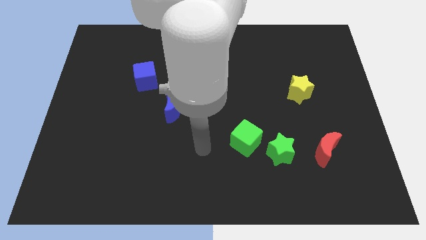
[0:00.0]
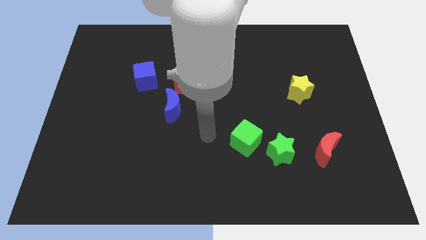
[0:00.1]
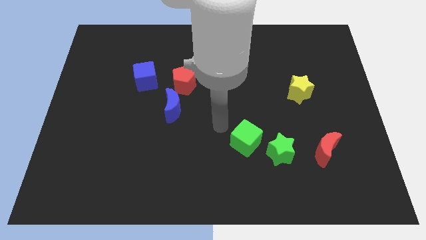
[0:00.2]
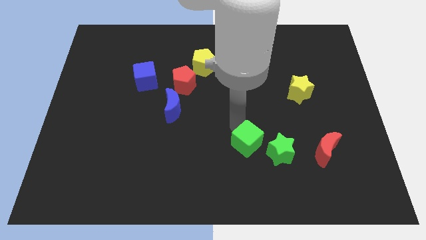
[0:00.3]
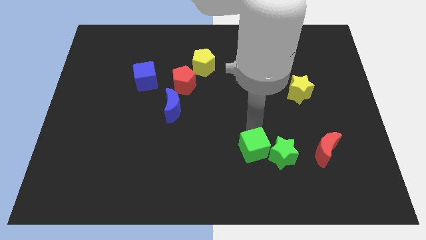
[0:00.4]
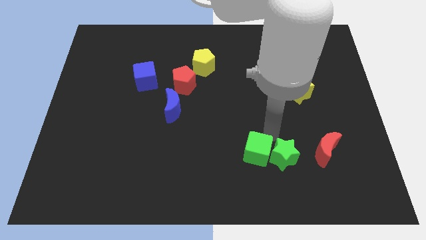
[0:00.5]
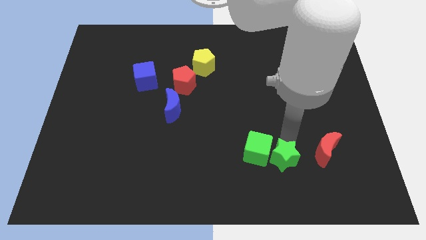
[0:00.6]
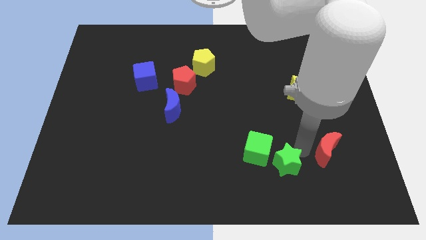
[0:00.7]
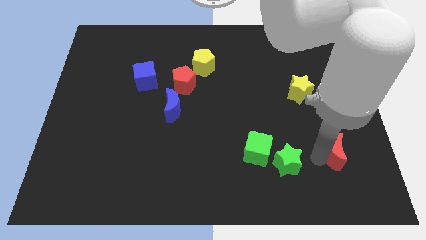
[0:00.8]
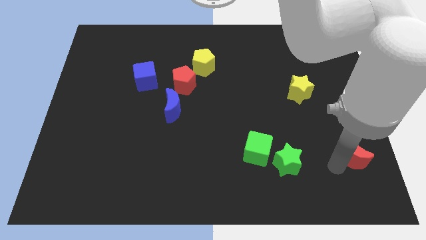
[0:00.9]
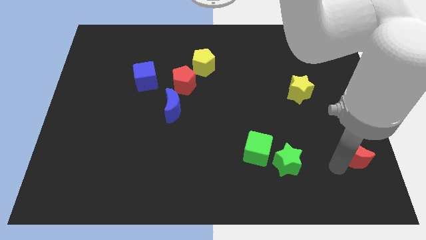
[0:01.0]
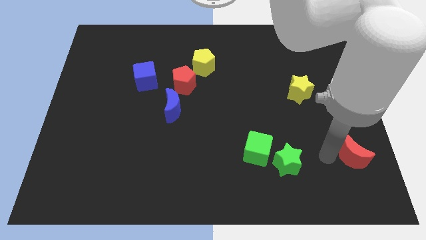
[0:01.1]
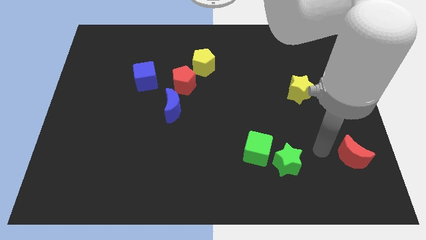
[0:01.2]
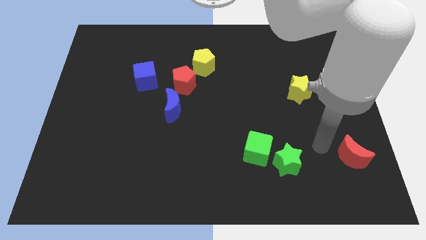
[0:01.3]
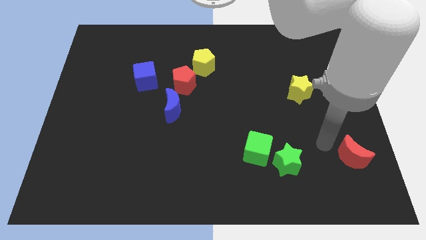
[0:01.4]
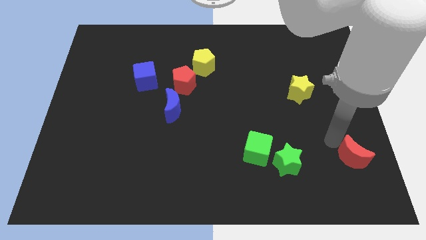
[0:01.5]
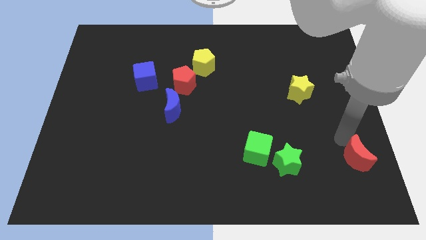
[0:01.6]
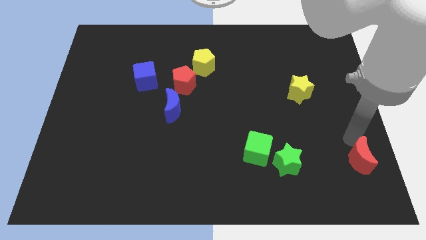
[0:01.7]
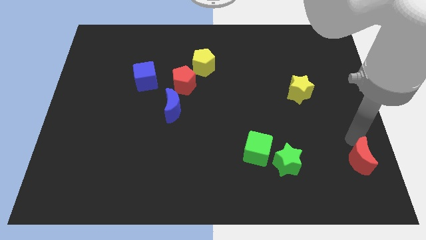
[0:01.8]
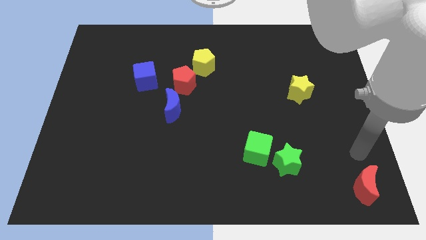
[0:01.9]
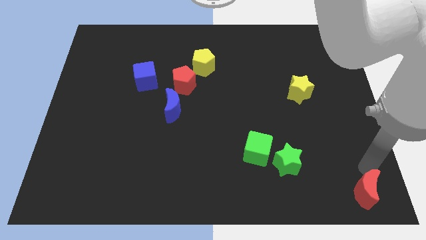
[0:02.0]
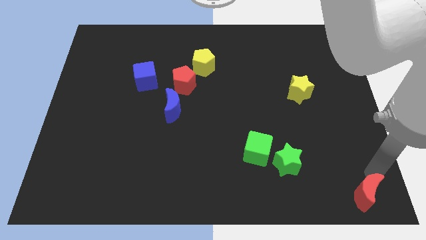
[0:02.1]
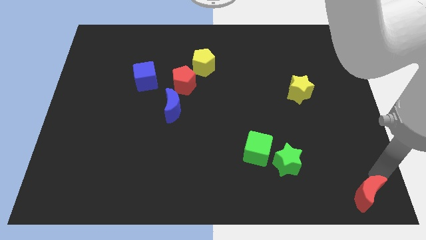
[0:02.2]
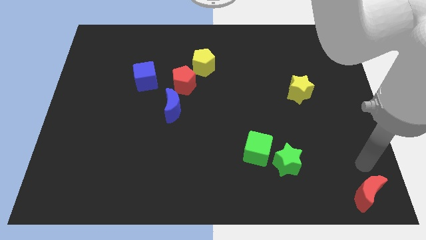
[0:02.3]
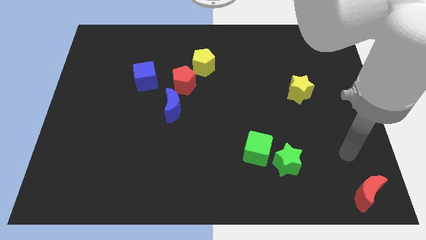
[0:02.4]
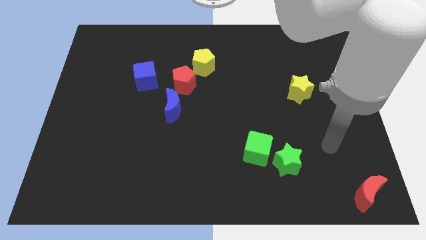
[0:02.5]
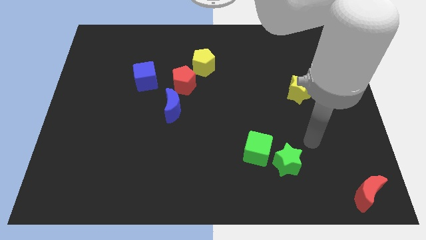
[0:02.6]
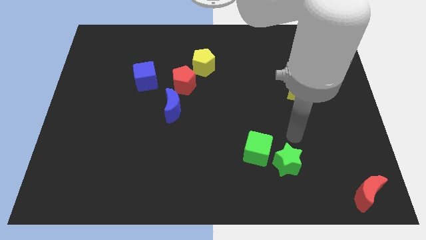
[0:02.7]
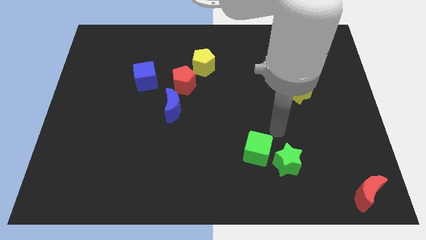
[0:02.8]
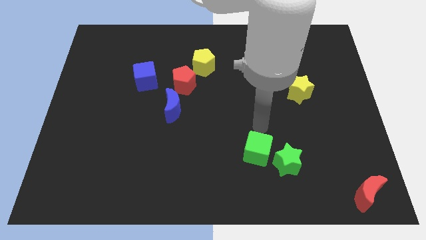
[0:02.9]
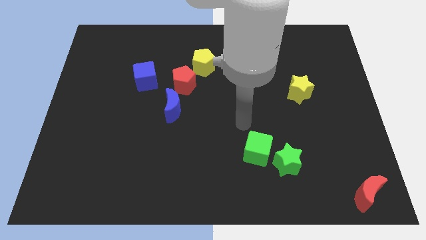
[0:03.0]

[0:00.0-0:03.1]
push the red crescent to the bottom right corner of the board

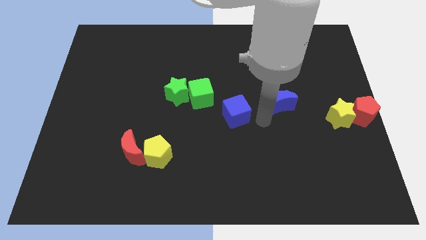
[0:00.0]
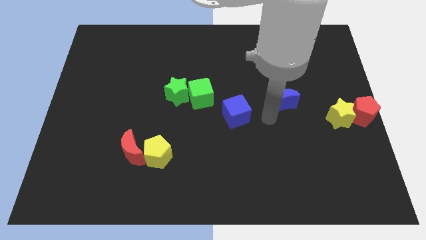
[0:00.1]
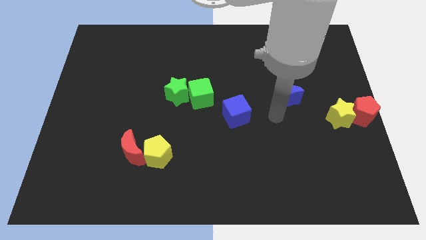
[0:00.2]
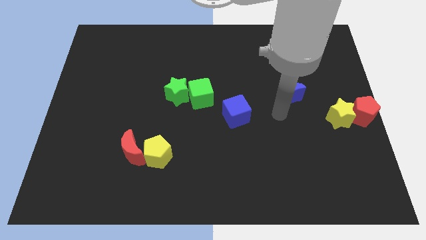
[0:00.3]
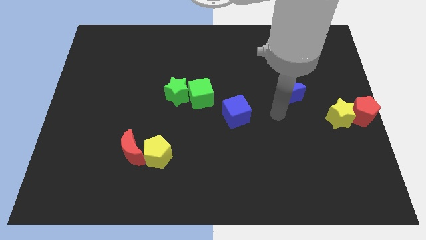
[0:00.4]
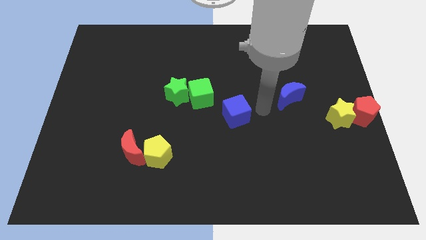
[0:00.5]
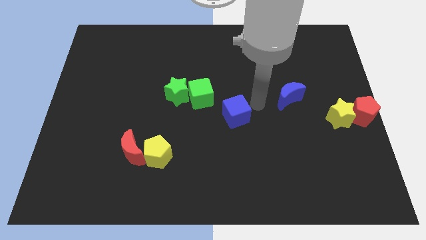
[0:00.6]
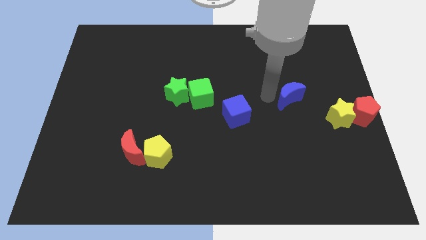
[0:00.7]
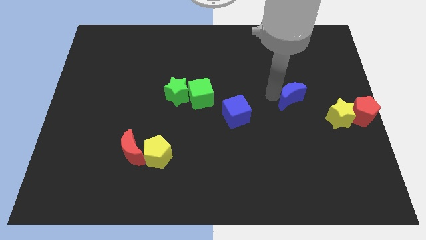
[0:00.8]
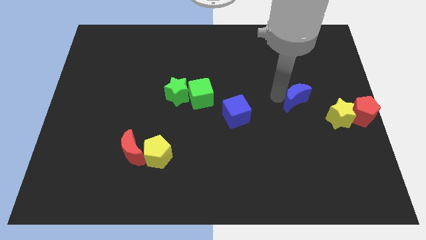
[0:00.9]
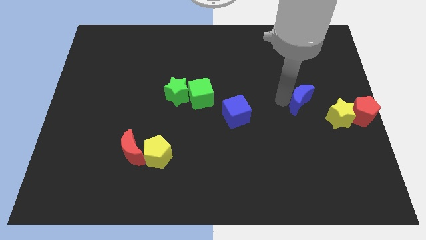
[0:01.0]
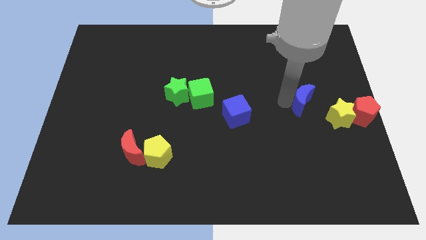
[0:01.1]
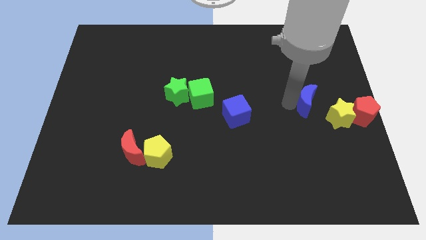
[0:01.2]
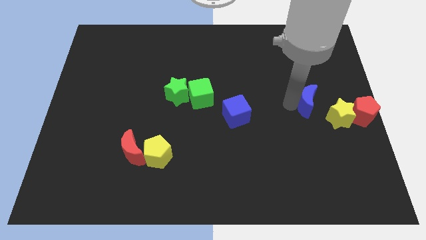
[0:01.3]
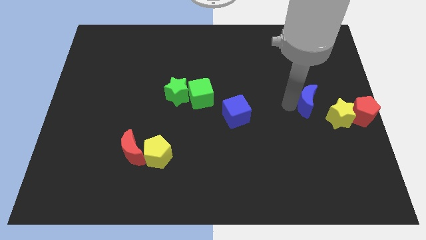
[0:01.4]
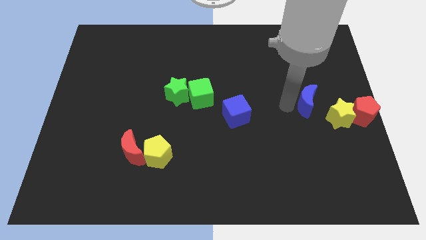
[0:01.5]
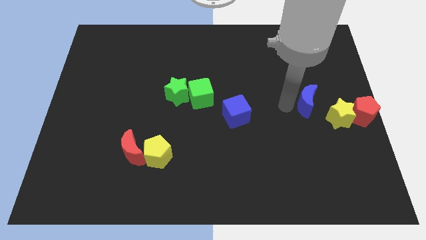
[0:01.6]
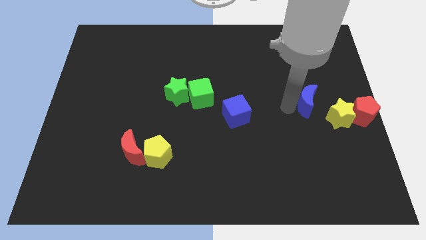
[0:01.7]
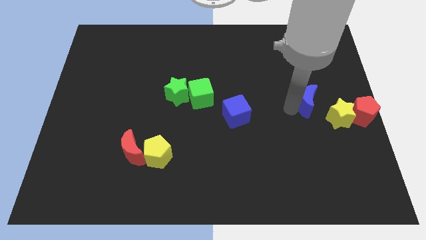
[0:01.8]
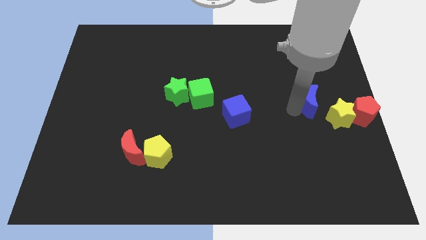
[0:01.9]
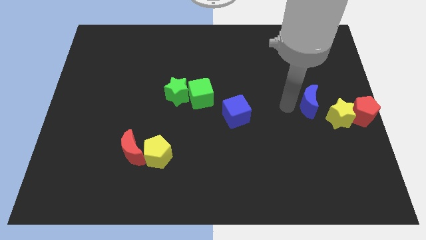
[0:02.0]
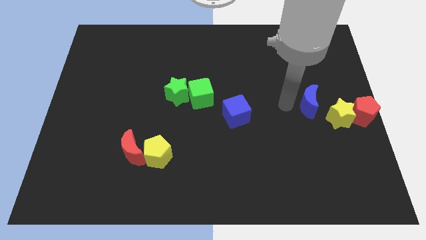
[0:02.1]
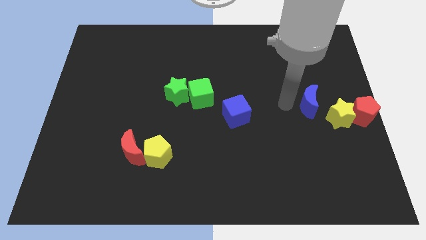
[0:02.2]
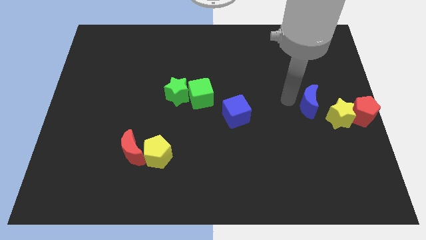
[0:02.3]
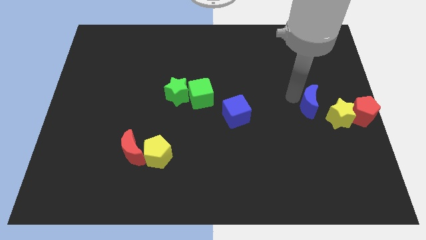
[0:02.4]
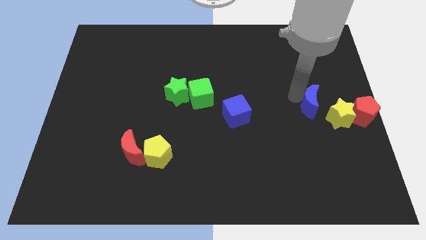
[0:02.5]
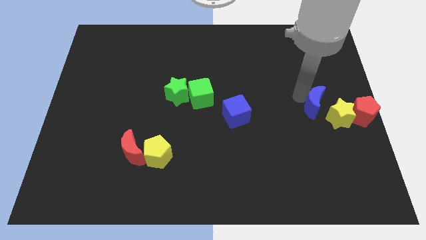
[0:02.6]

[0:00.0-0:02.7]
place blue moon to the top left of the of the yellow star

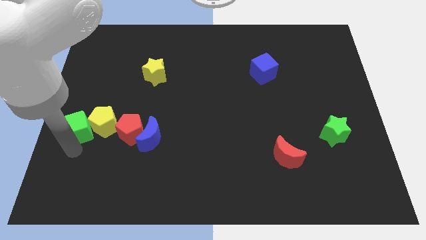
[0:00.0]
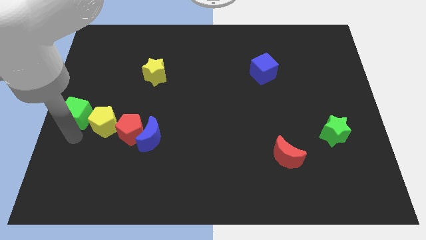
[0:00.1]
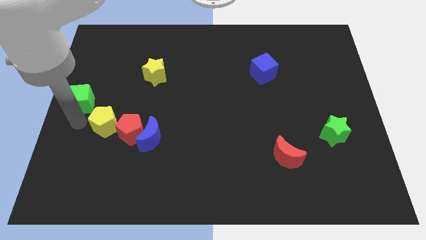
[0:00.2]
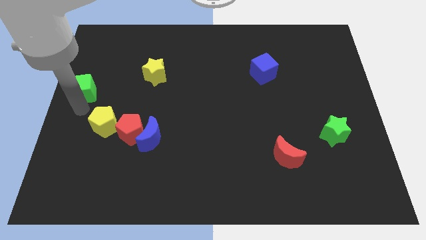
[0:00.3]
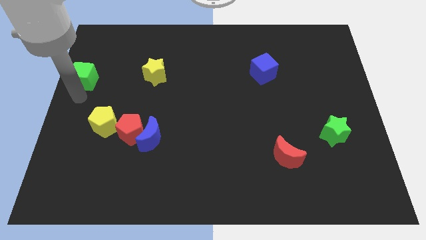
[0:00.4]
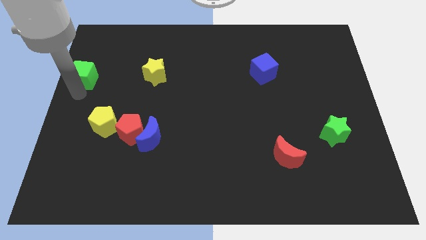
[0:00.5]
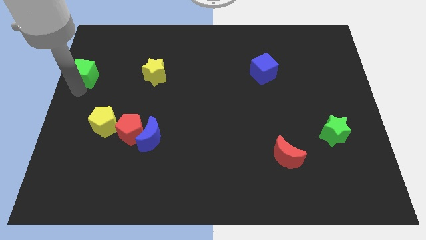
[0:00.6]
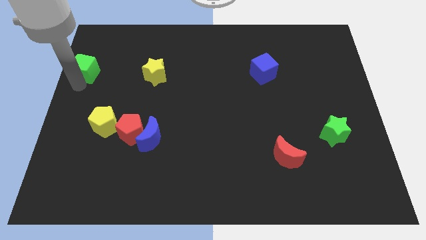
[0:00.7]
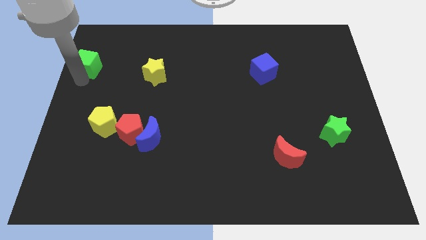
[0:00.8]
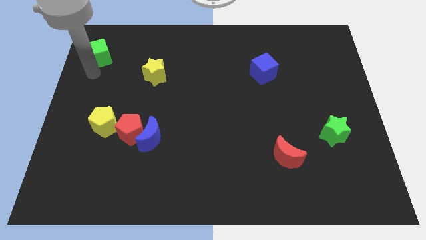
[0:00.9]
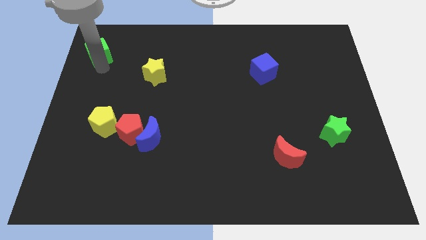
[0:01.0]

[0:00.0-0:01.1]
take the green cube away from the yellow pentagon

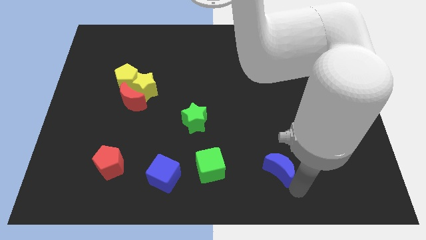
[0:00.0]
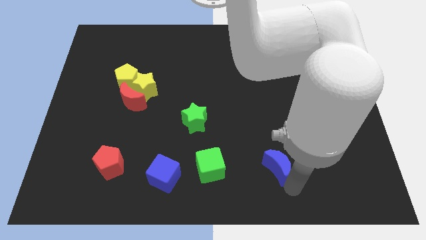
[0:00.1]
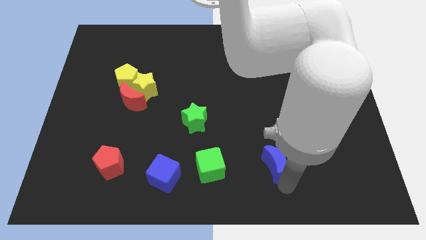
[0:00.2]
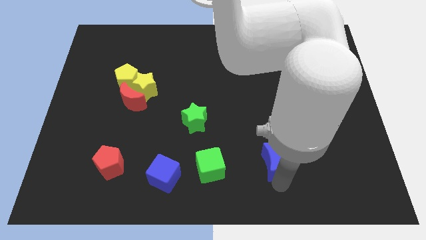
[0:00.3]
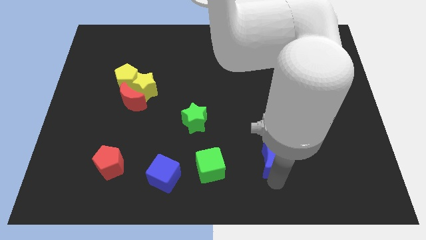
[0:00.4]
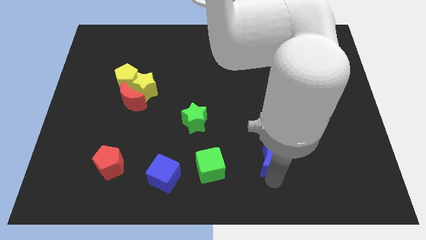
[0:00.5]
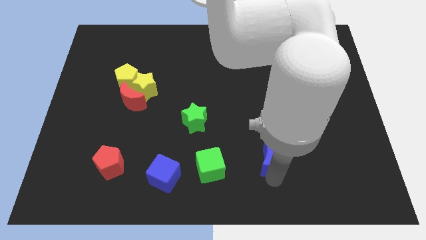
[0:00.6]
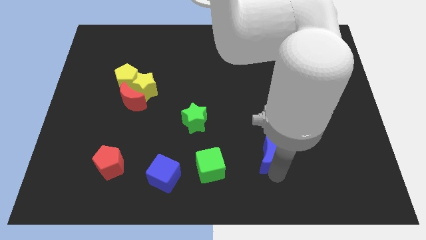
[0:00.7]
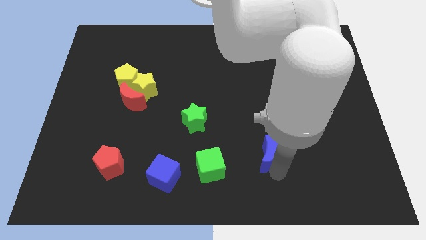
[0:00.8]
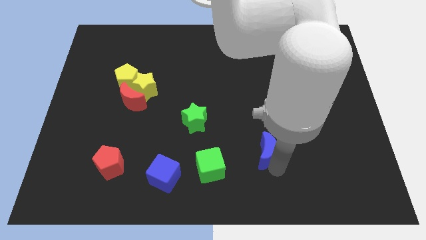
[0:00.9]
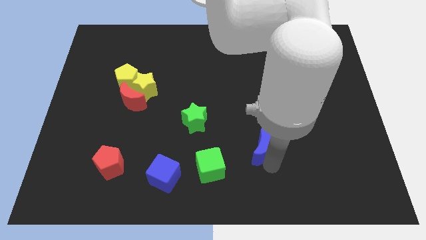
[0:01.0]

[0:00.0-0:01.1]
move blue moon diagonal to green cube

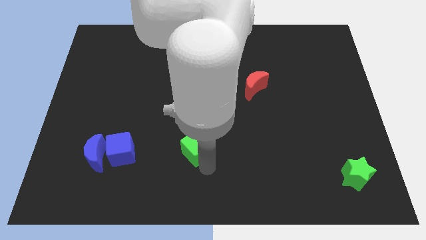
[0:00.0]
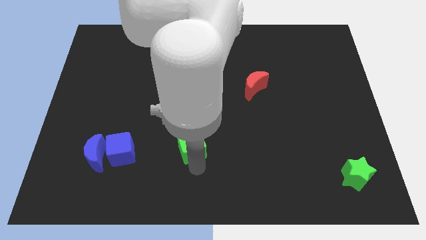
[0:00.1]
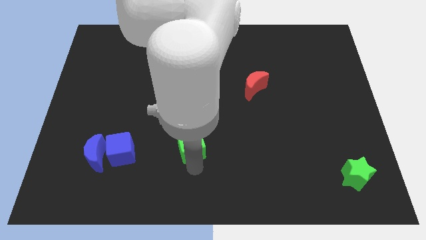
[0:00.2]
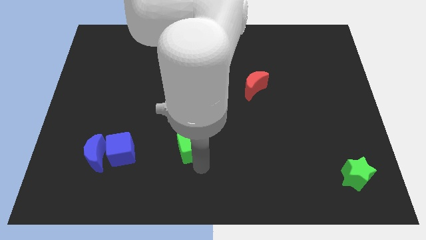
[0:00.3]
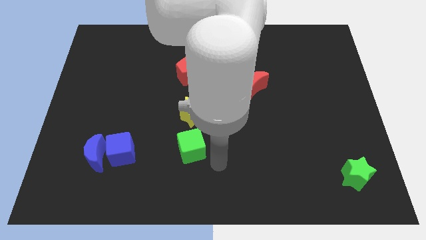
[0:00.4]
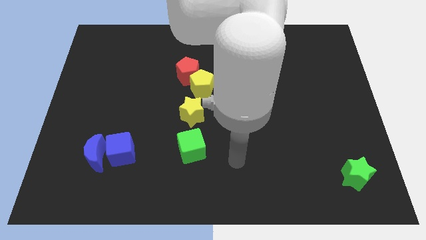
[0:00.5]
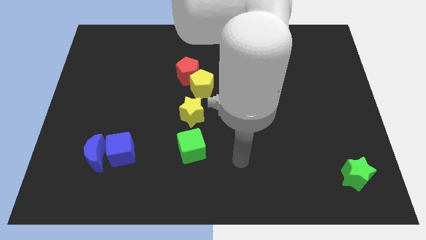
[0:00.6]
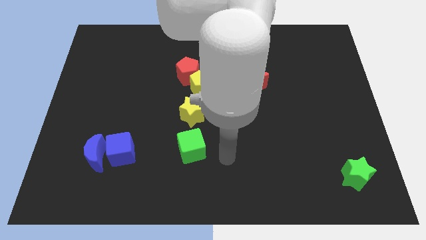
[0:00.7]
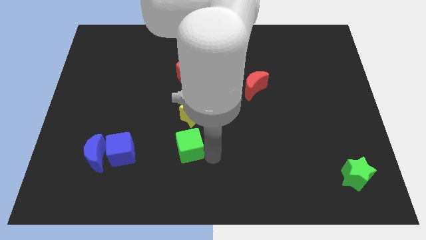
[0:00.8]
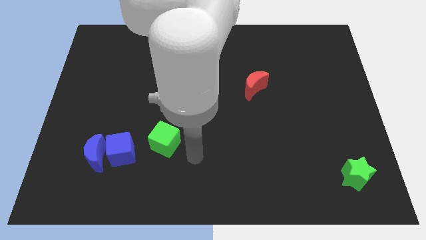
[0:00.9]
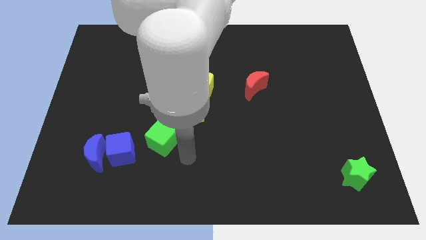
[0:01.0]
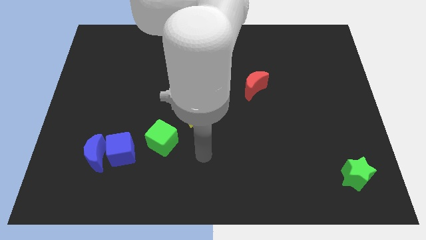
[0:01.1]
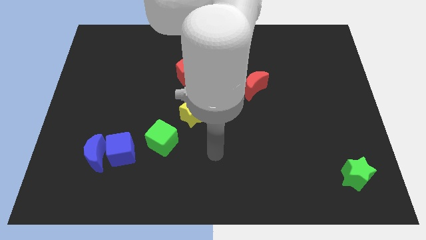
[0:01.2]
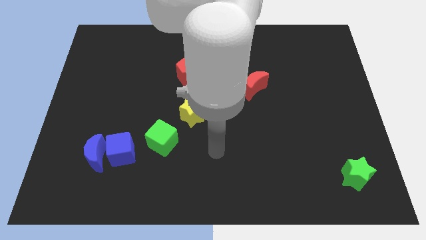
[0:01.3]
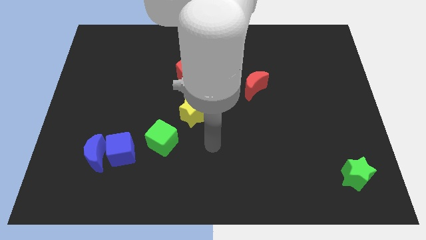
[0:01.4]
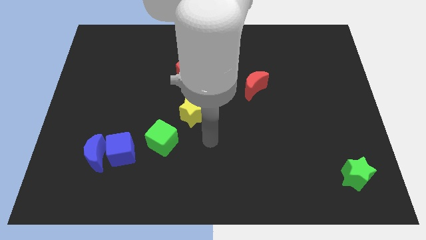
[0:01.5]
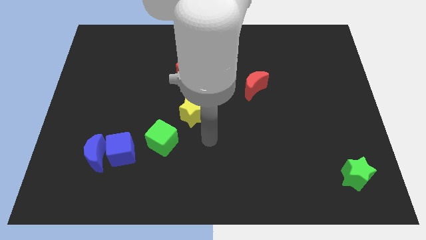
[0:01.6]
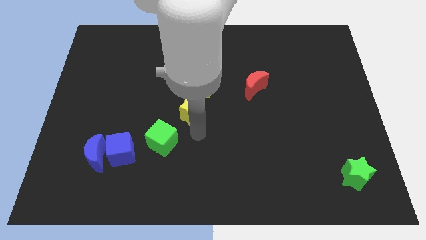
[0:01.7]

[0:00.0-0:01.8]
push green cube towards the blue cube
